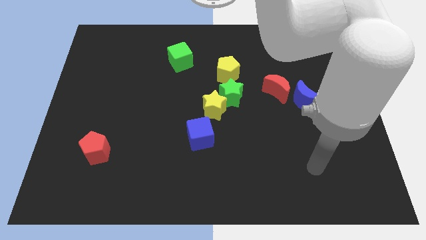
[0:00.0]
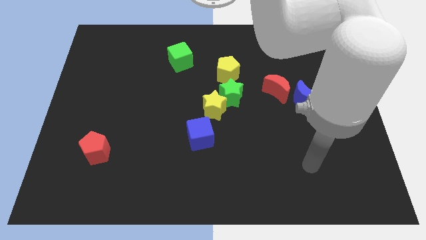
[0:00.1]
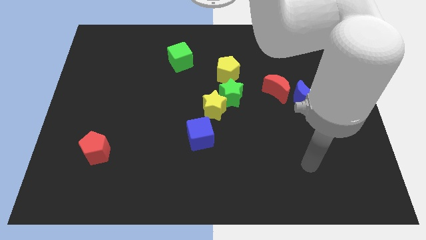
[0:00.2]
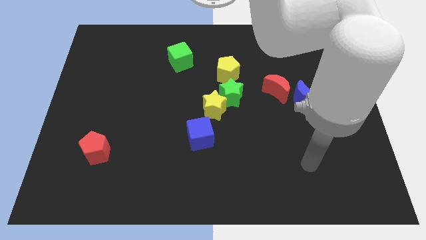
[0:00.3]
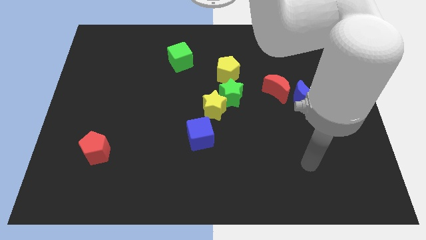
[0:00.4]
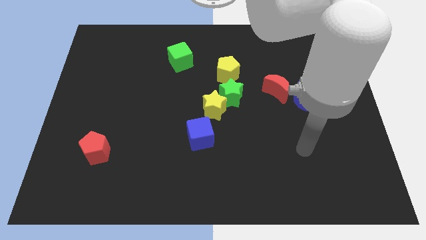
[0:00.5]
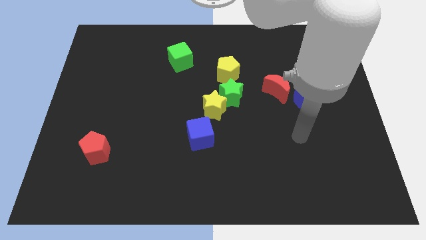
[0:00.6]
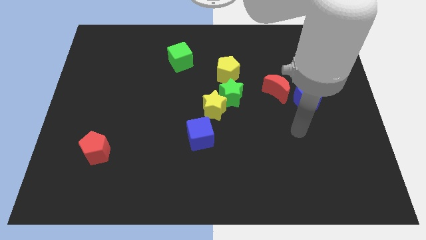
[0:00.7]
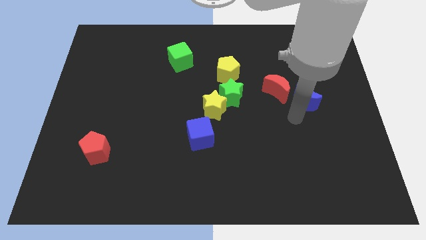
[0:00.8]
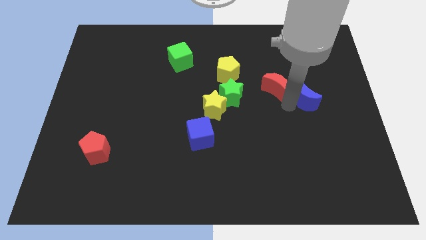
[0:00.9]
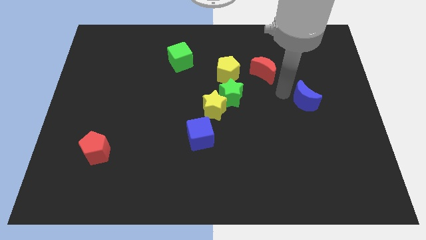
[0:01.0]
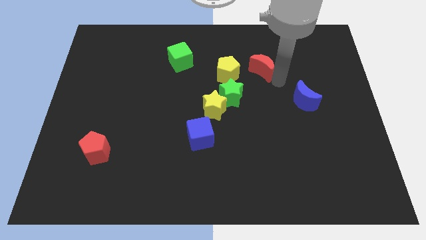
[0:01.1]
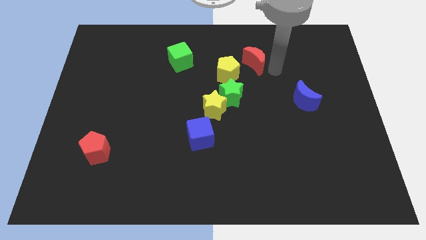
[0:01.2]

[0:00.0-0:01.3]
move the red moon to the right of the yellow pentagon

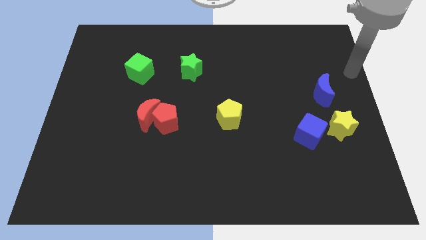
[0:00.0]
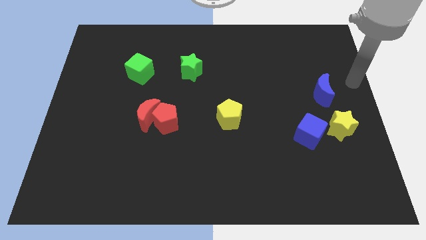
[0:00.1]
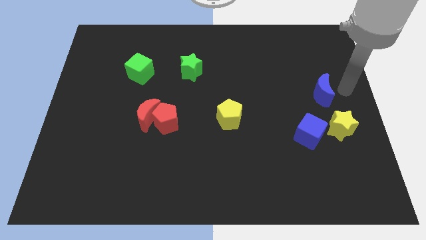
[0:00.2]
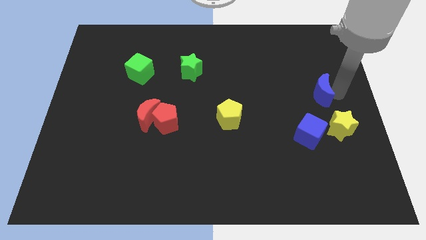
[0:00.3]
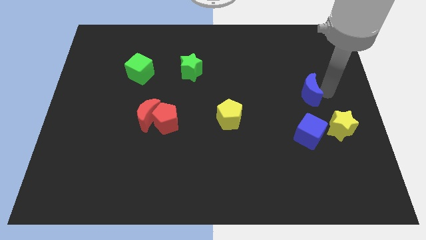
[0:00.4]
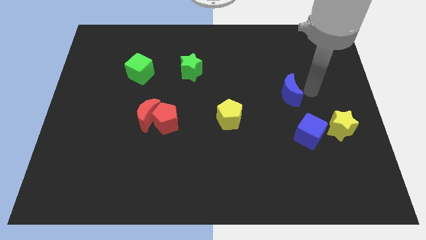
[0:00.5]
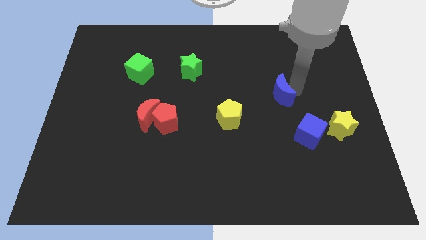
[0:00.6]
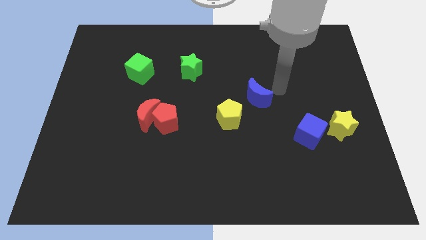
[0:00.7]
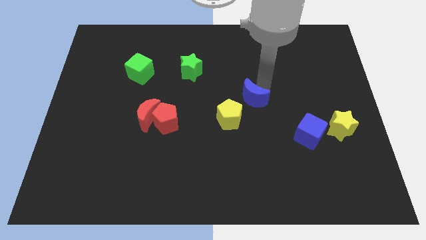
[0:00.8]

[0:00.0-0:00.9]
push the blue moon towards the center

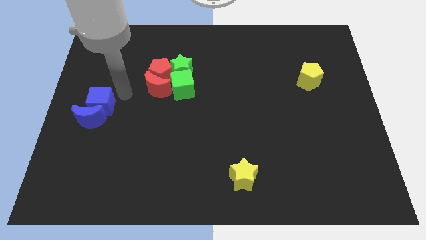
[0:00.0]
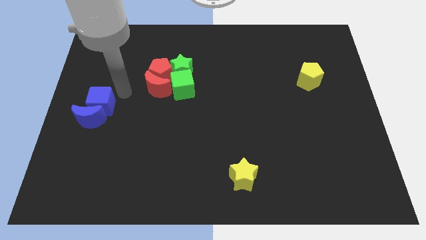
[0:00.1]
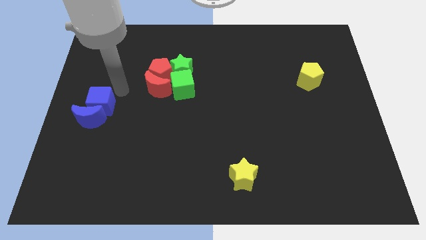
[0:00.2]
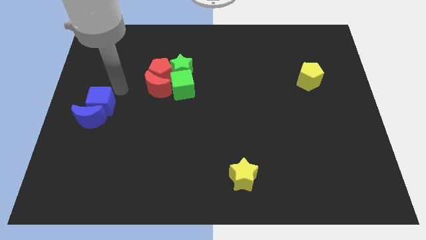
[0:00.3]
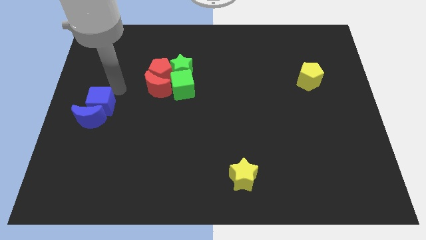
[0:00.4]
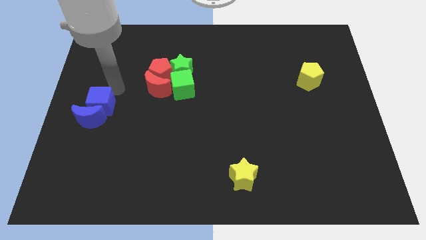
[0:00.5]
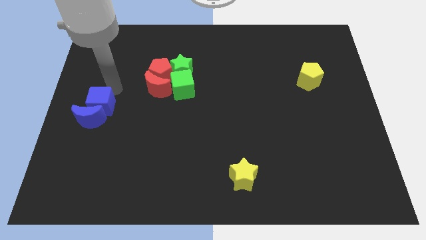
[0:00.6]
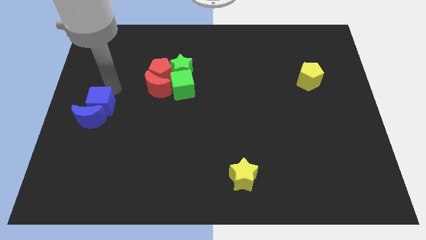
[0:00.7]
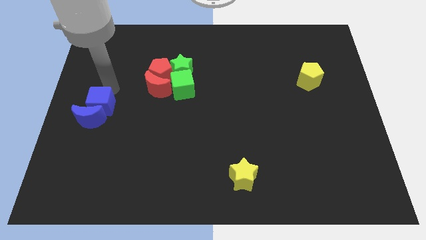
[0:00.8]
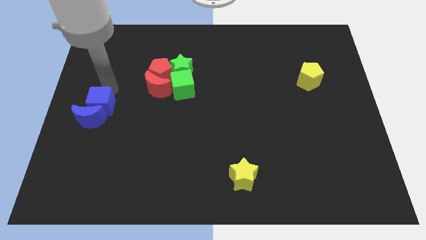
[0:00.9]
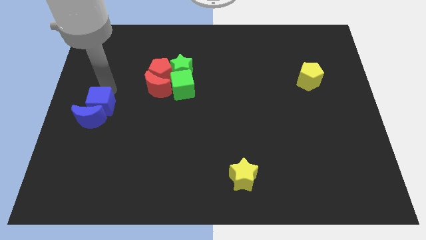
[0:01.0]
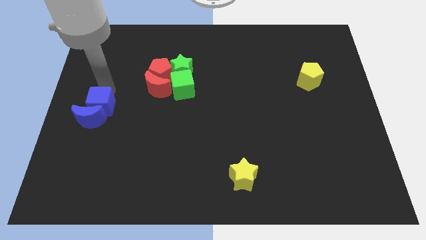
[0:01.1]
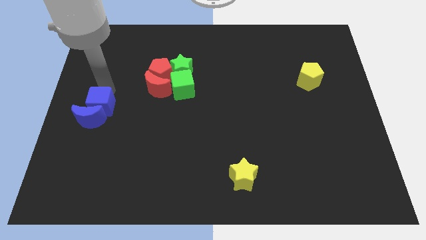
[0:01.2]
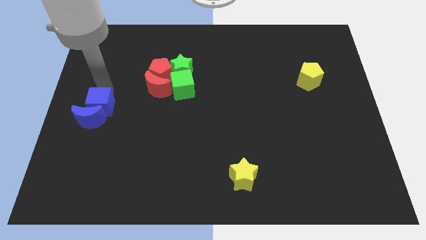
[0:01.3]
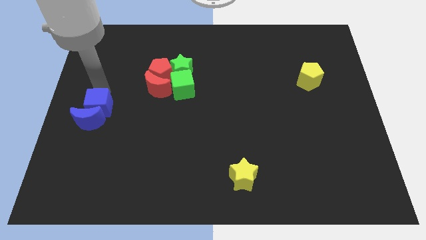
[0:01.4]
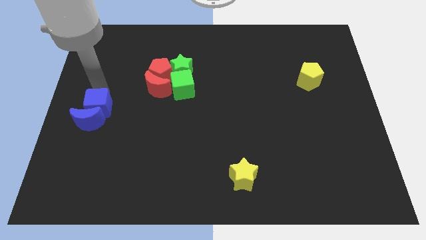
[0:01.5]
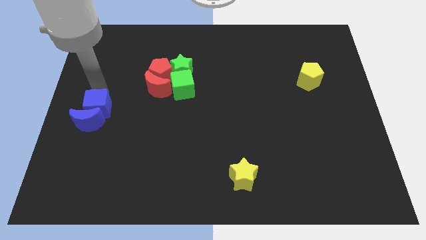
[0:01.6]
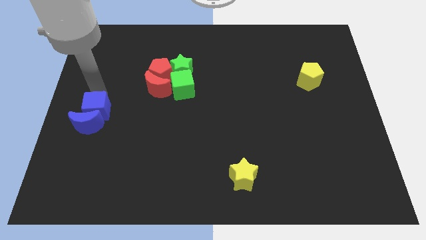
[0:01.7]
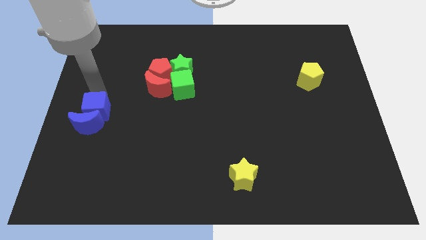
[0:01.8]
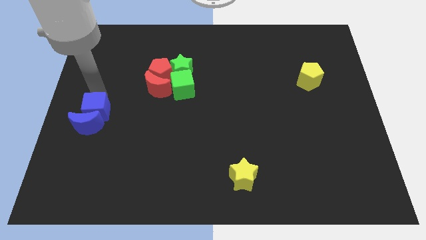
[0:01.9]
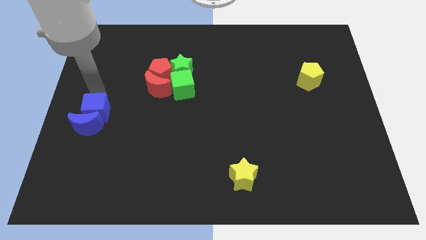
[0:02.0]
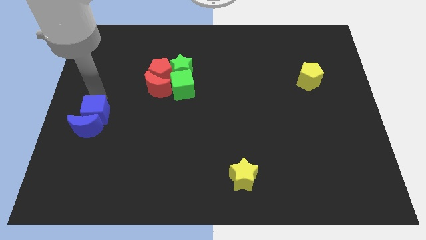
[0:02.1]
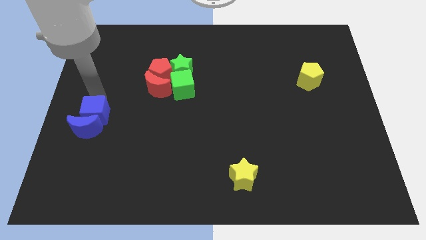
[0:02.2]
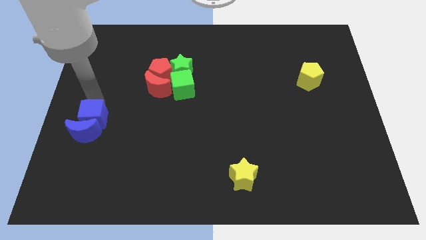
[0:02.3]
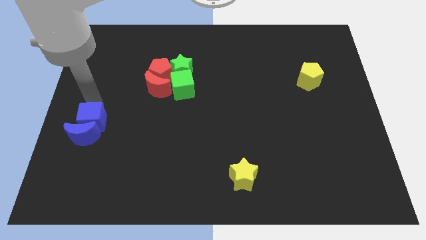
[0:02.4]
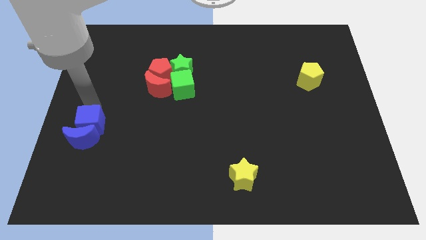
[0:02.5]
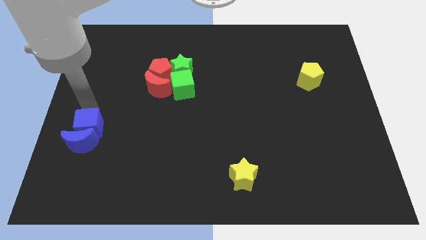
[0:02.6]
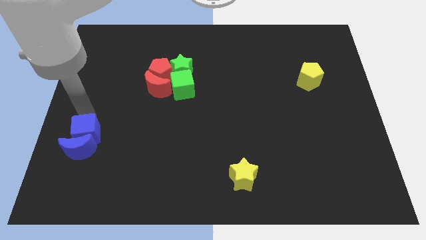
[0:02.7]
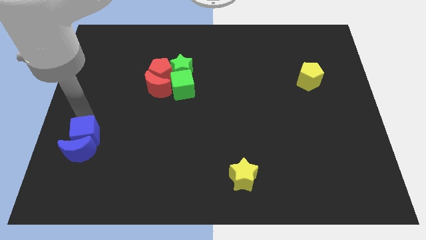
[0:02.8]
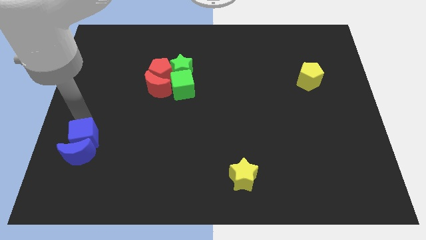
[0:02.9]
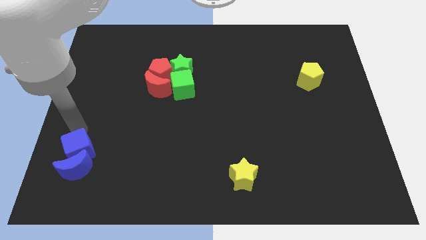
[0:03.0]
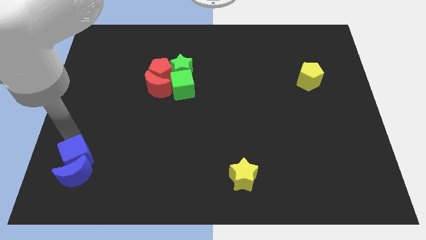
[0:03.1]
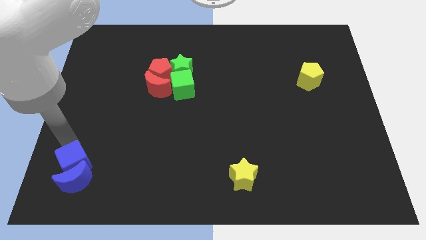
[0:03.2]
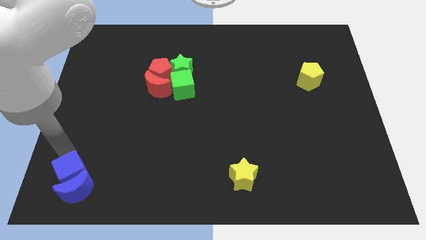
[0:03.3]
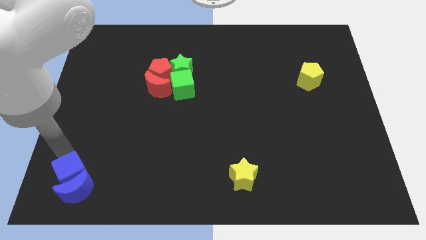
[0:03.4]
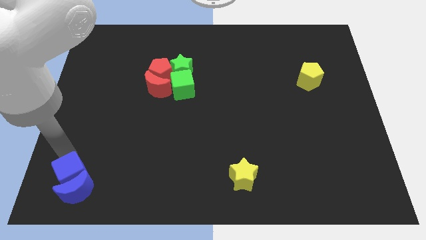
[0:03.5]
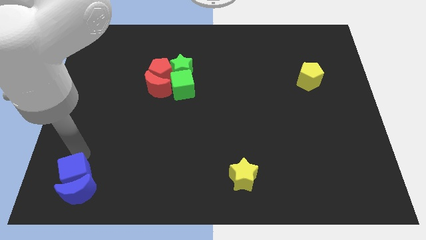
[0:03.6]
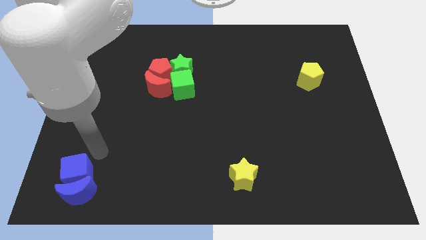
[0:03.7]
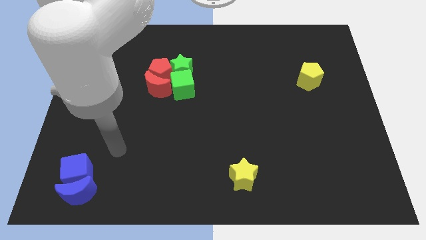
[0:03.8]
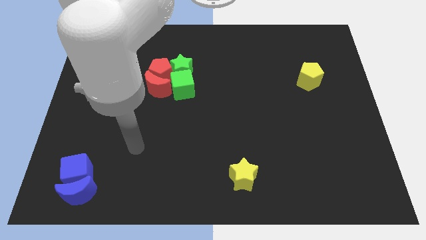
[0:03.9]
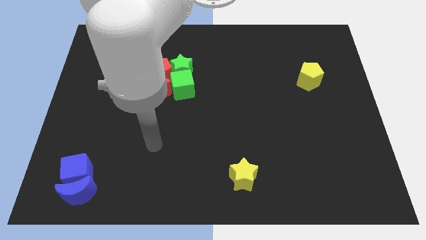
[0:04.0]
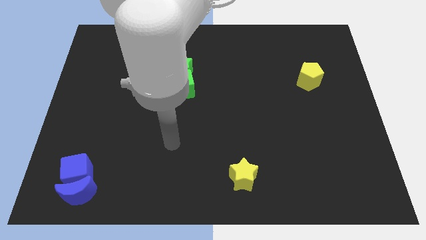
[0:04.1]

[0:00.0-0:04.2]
push the blue blocks to the bottom left side of the board

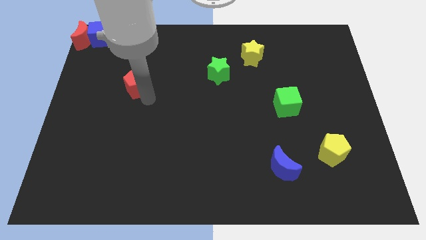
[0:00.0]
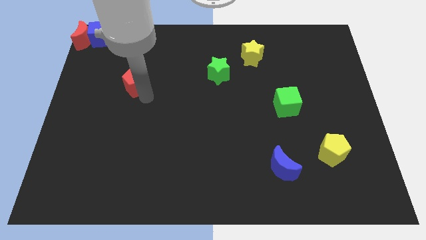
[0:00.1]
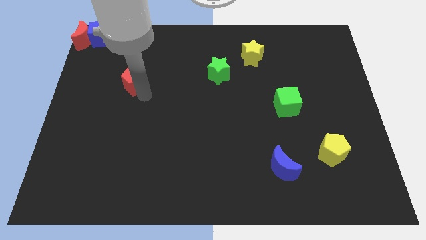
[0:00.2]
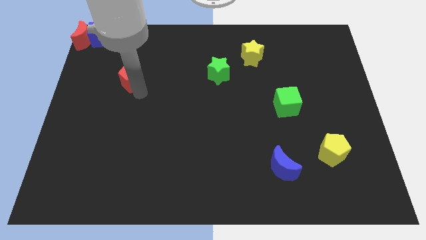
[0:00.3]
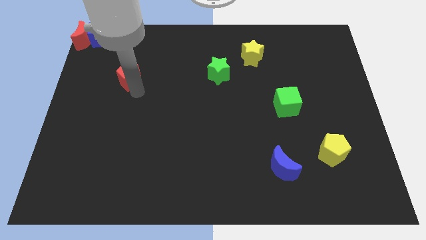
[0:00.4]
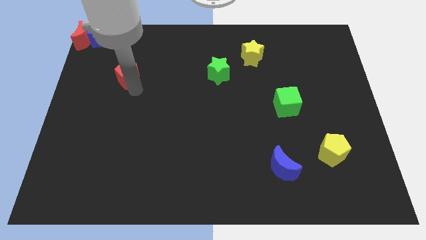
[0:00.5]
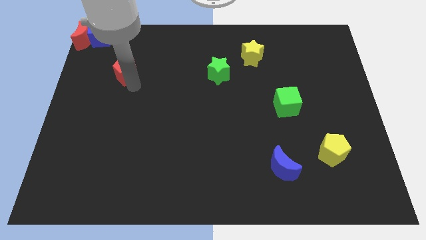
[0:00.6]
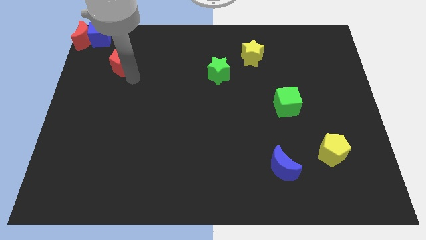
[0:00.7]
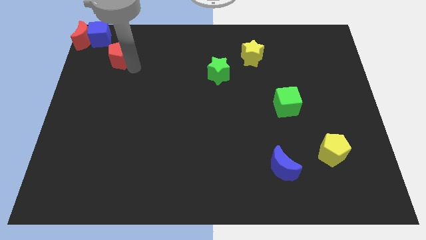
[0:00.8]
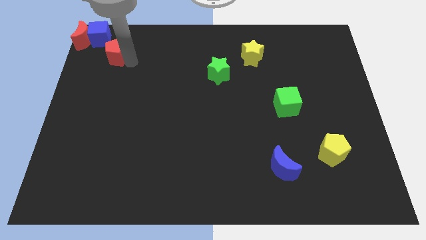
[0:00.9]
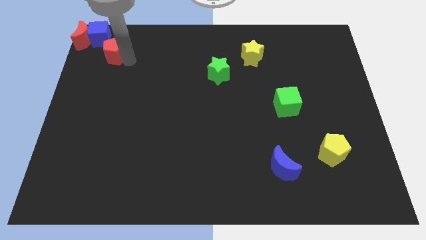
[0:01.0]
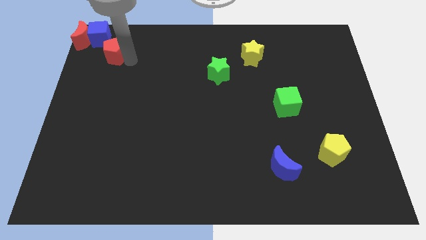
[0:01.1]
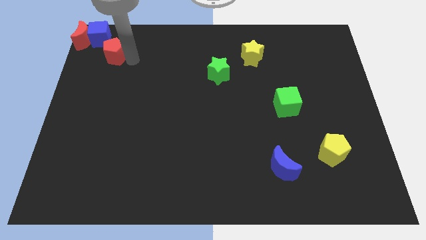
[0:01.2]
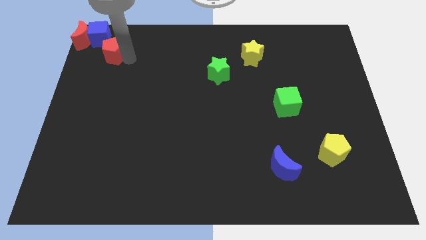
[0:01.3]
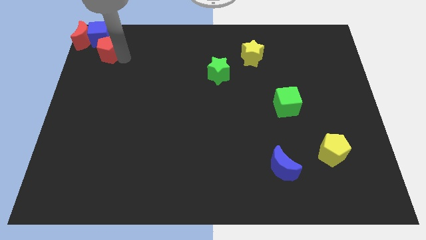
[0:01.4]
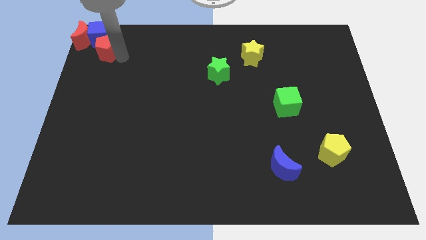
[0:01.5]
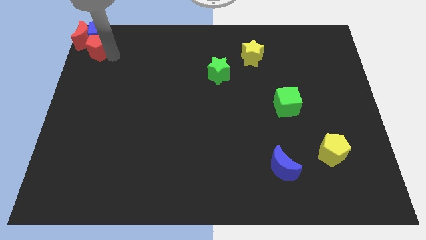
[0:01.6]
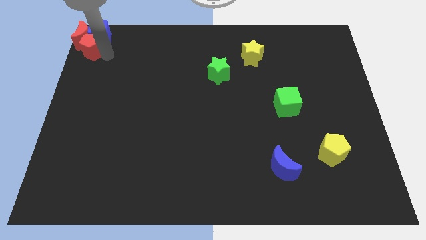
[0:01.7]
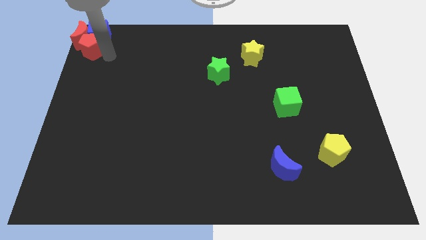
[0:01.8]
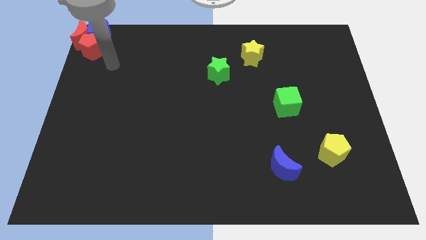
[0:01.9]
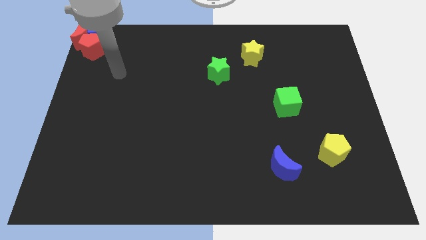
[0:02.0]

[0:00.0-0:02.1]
move red pentagon into the top left corner

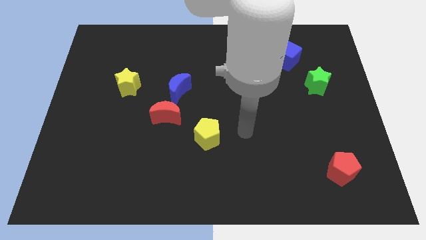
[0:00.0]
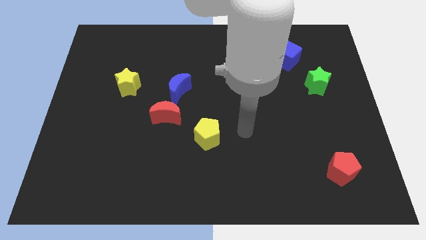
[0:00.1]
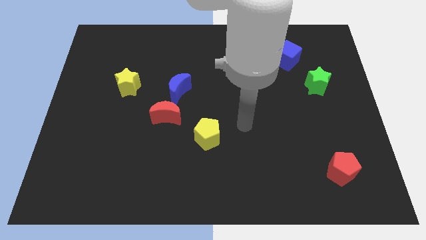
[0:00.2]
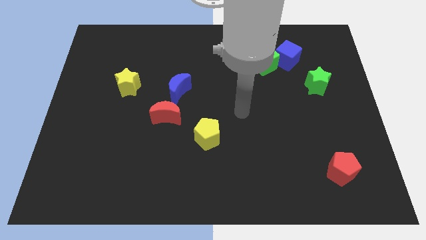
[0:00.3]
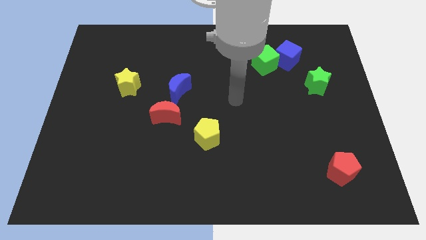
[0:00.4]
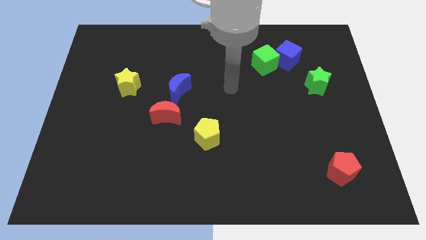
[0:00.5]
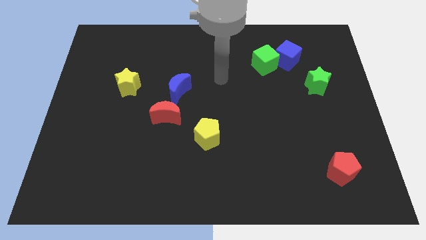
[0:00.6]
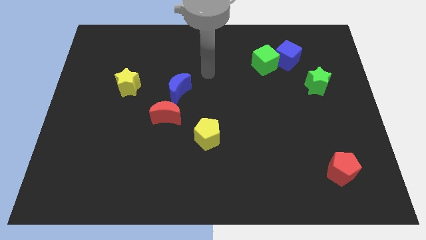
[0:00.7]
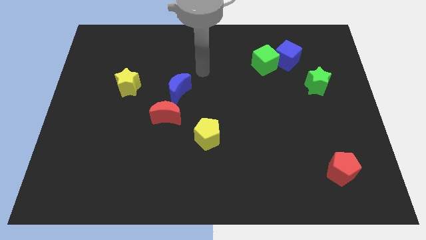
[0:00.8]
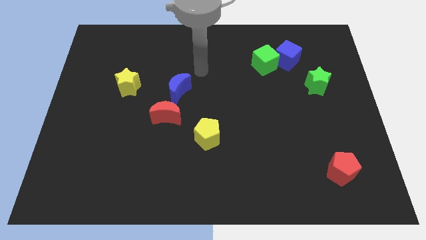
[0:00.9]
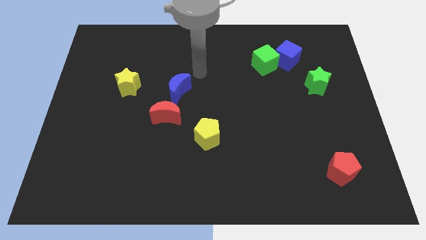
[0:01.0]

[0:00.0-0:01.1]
place your arm to the top of blue moon
